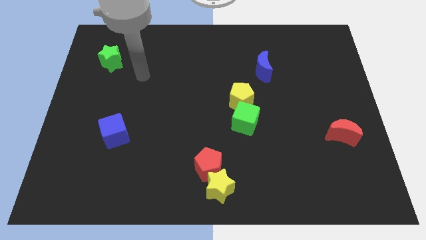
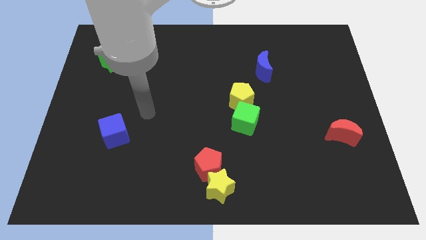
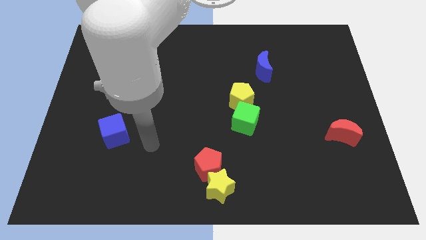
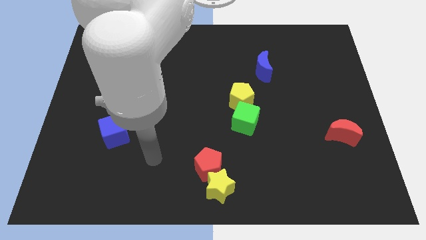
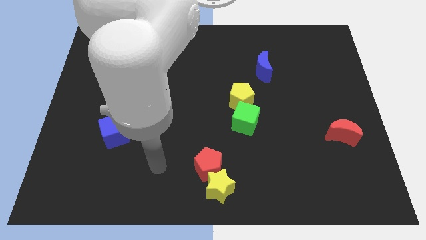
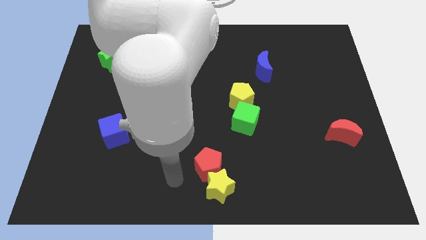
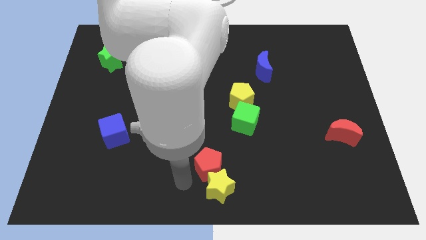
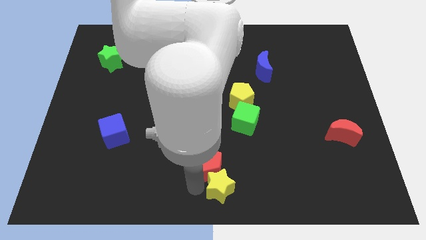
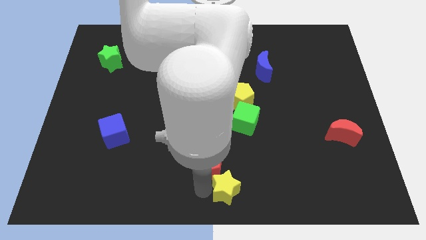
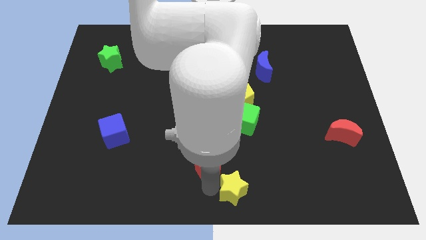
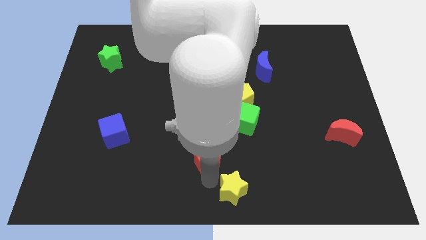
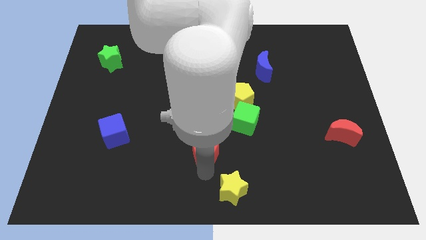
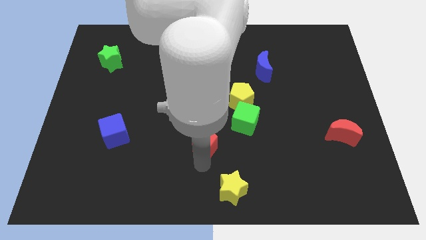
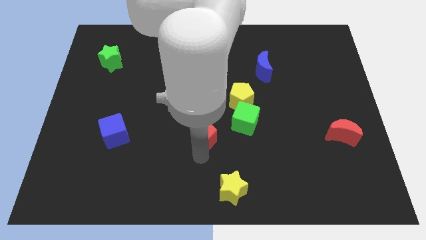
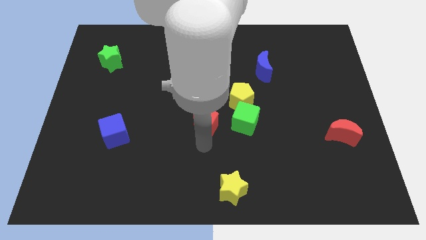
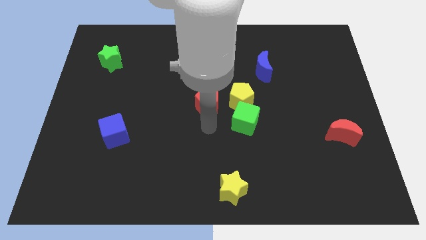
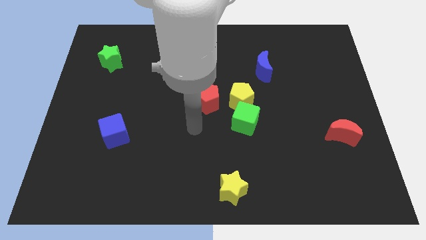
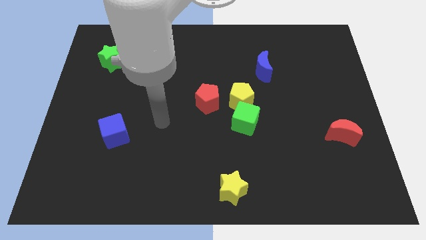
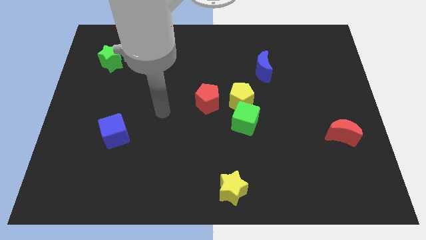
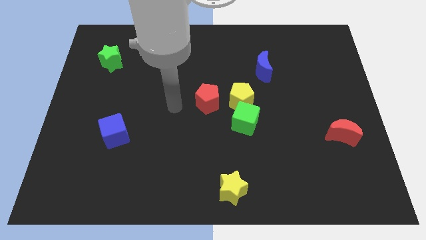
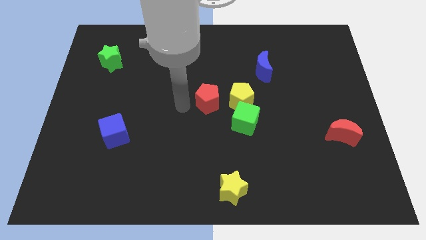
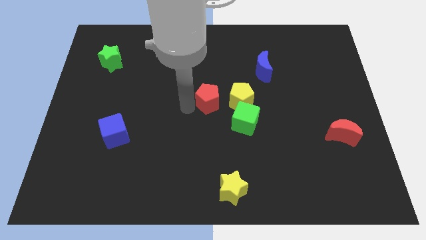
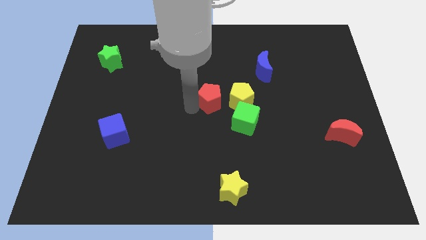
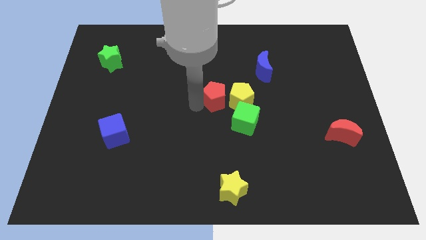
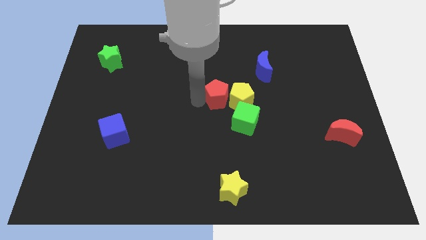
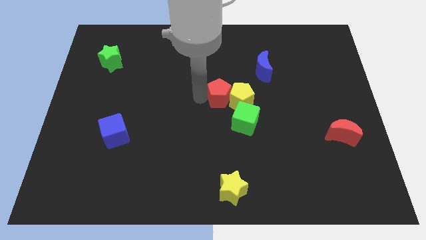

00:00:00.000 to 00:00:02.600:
move the red pentagon towards the yellow pentagon

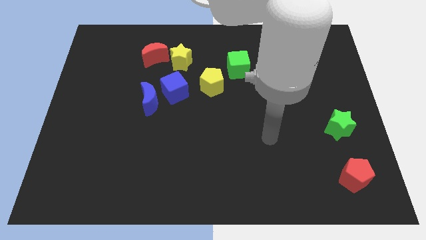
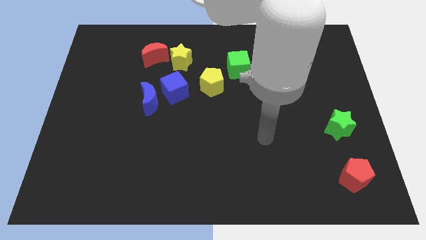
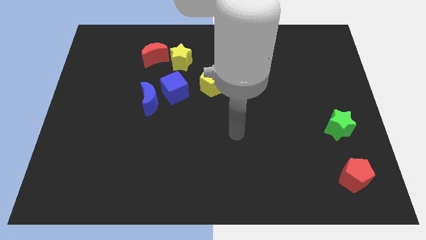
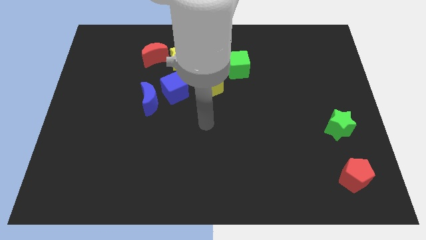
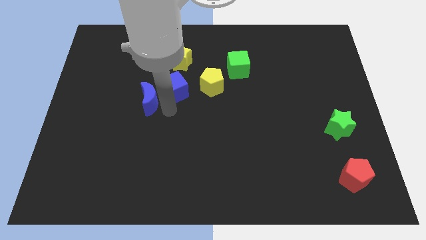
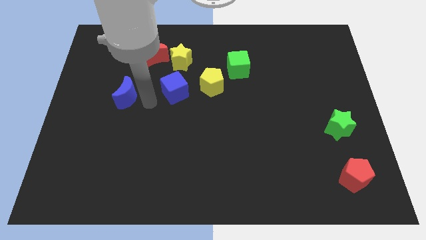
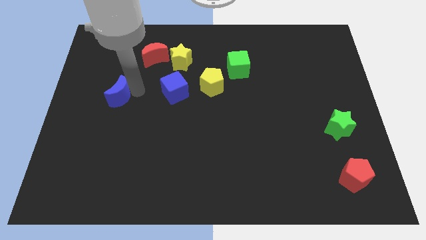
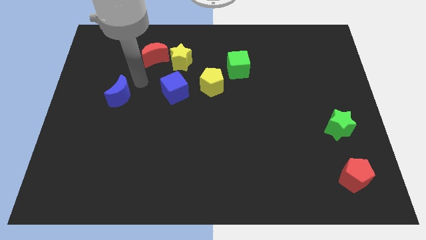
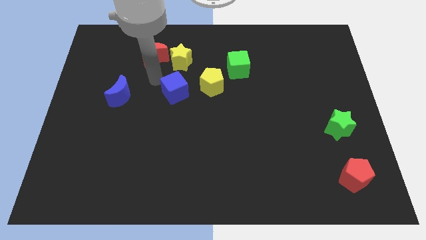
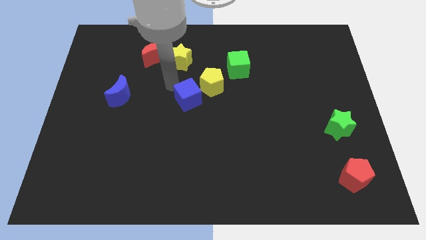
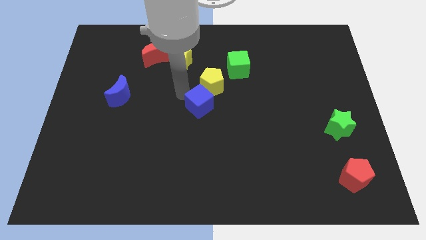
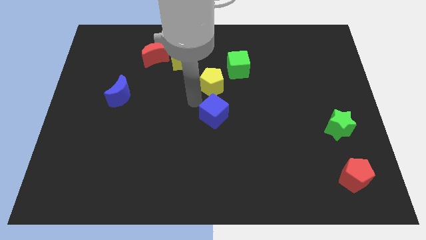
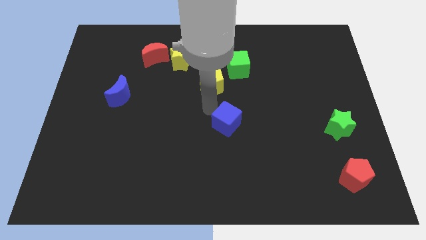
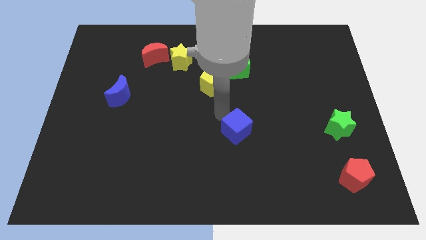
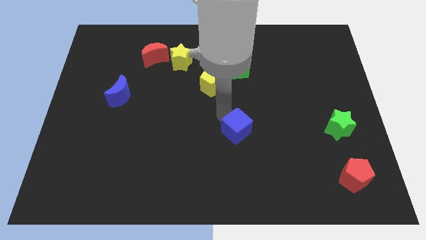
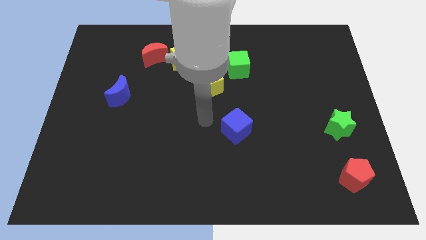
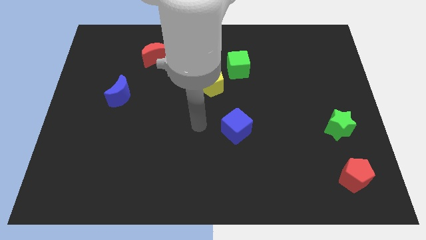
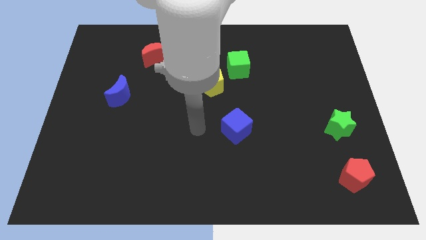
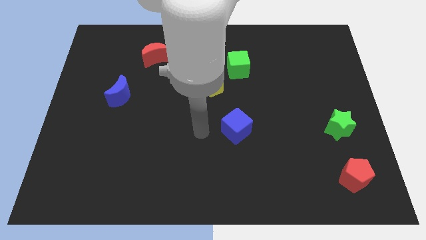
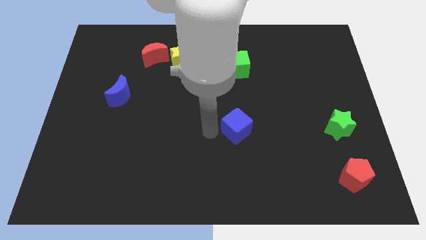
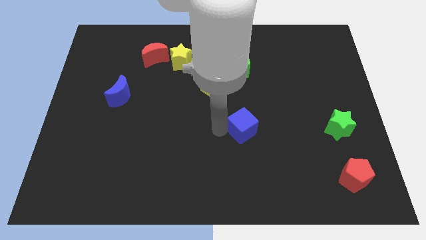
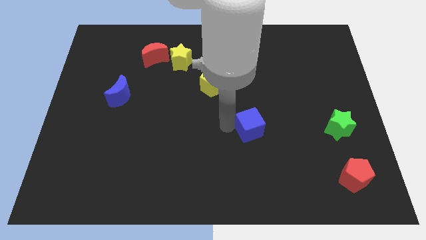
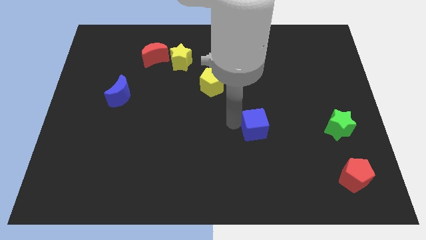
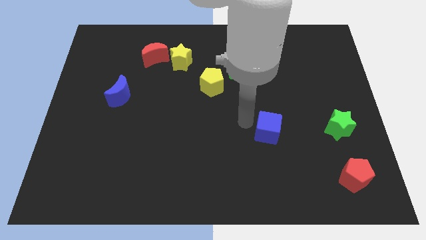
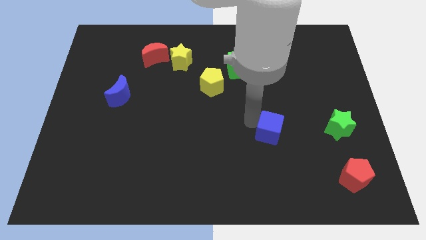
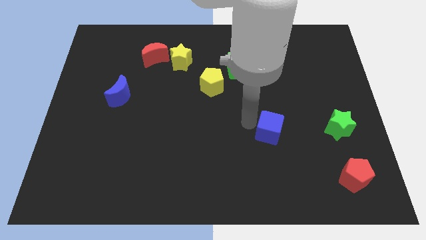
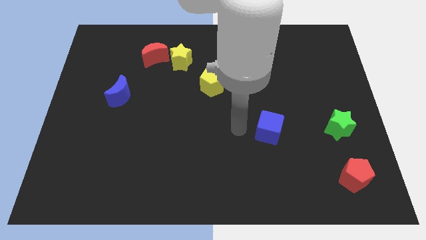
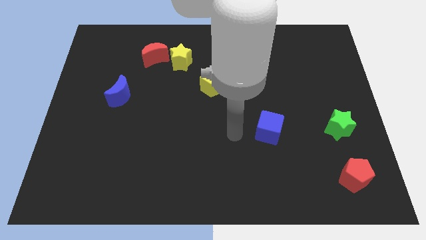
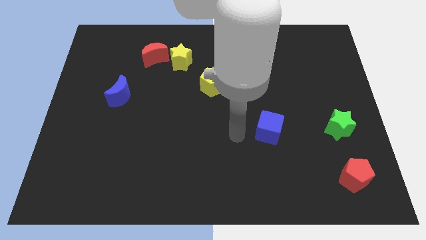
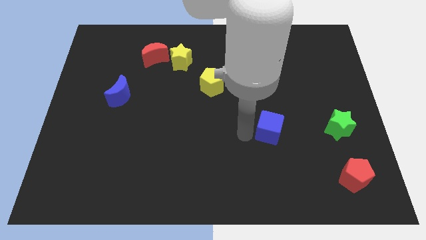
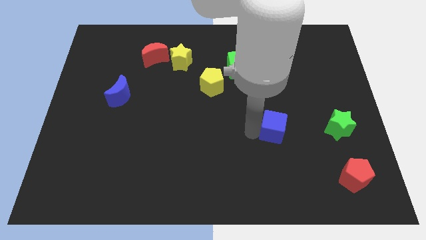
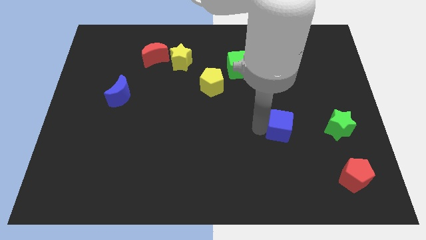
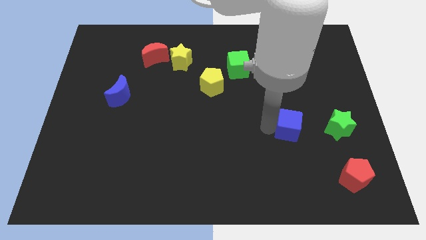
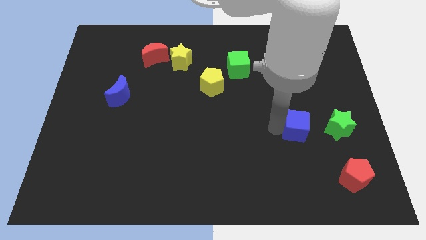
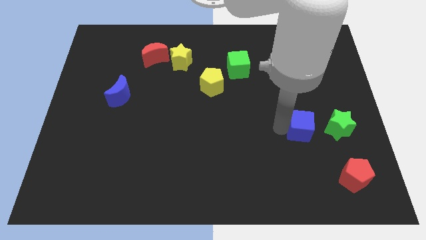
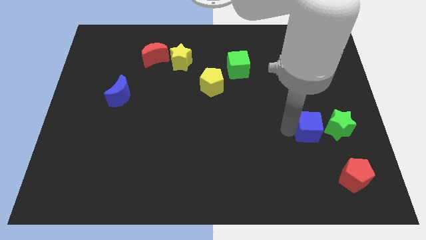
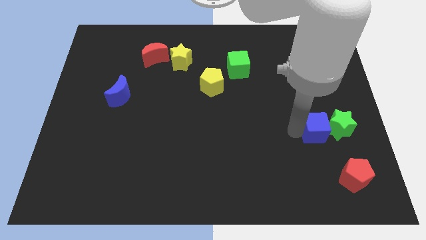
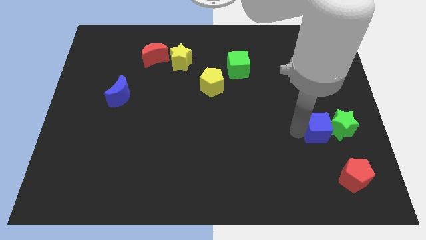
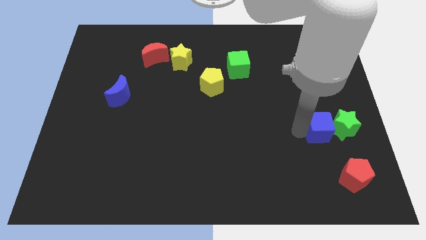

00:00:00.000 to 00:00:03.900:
move the blue cube next to the green star

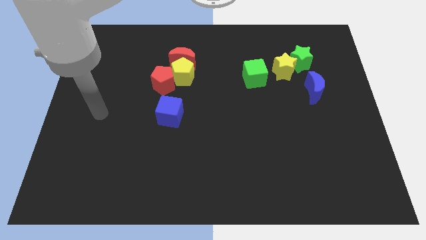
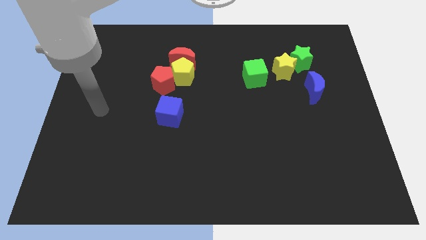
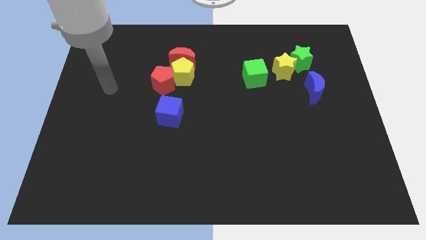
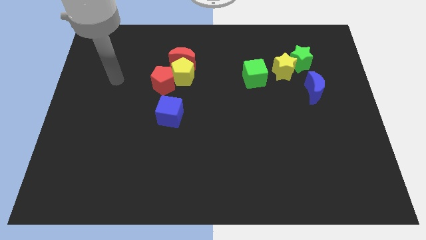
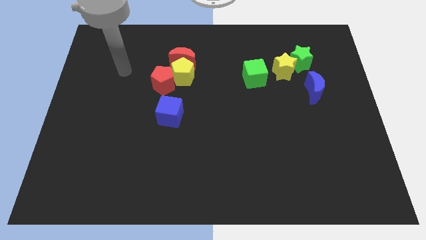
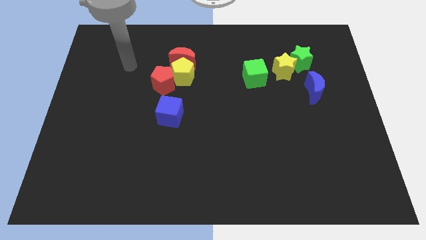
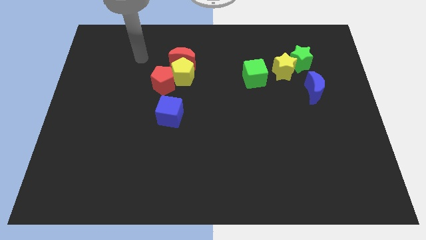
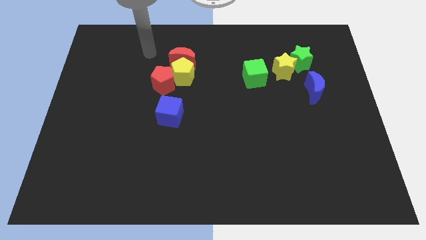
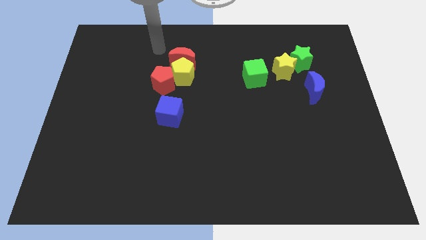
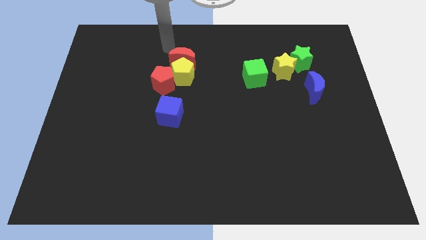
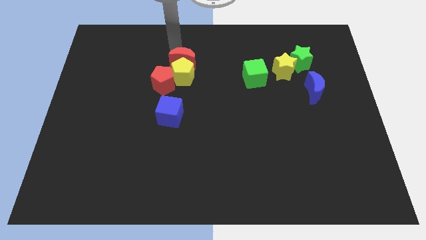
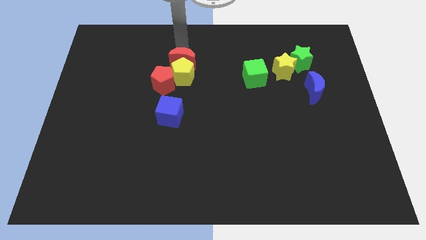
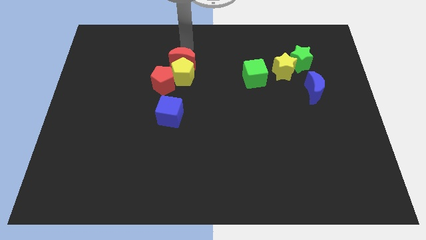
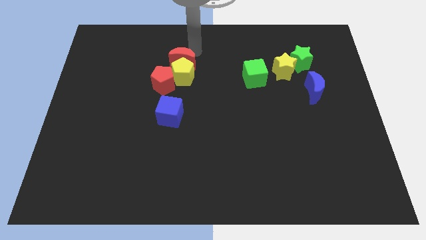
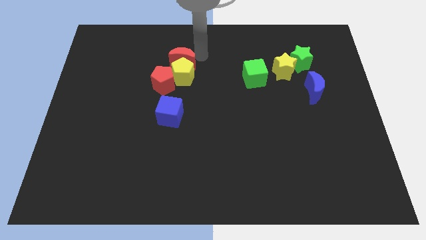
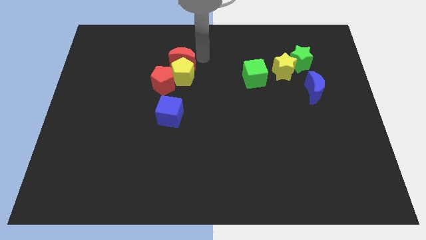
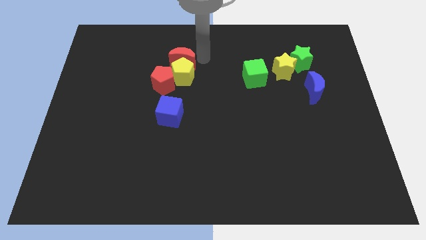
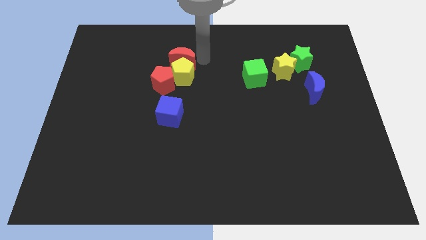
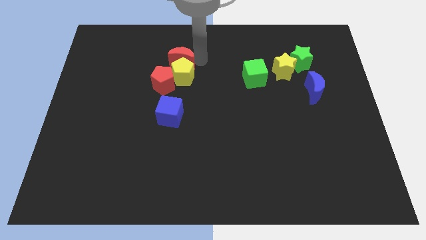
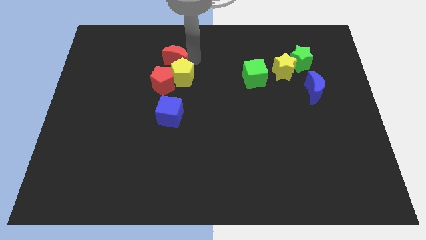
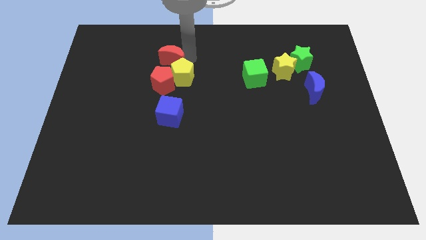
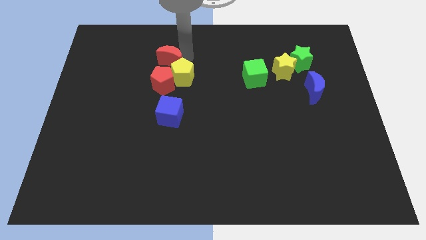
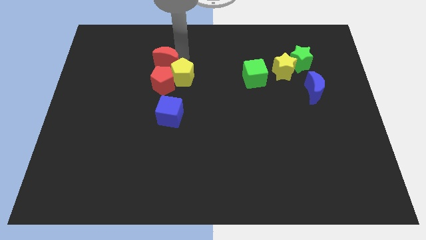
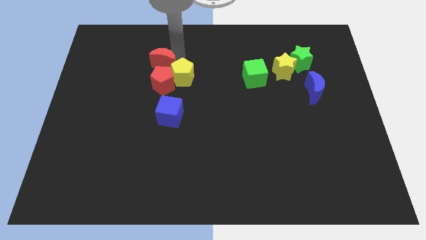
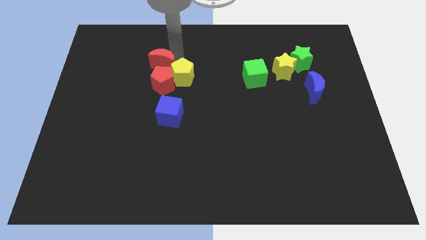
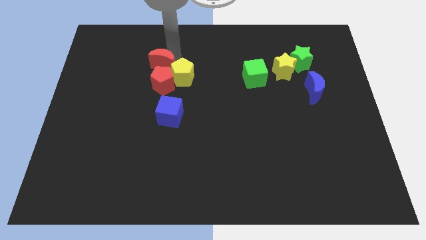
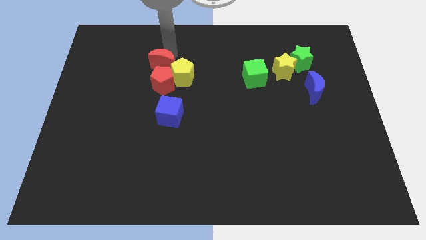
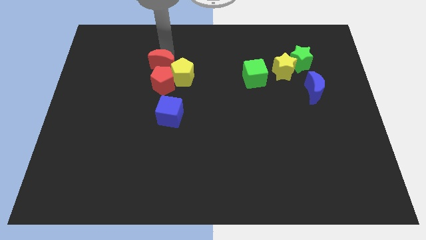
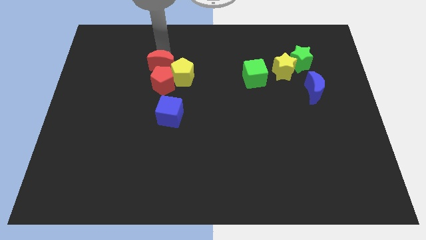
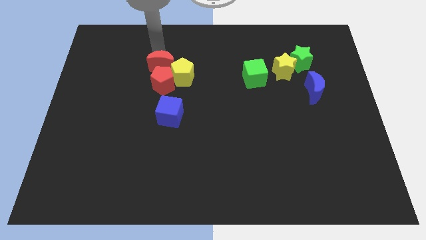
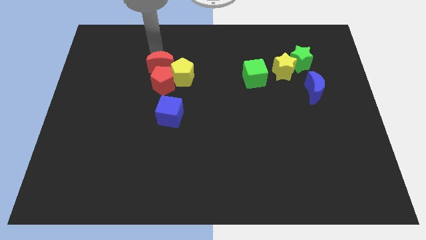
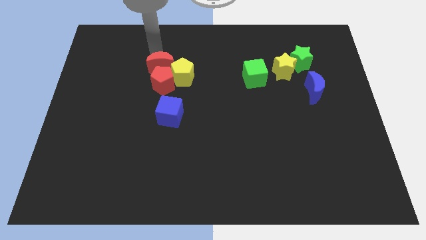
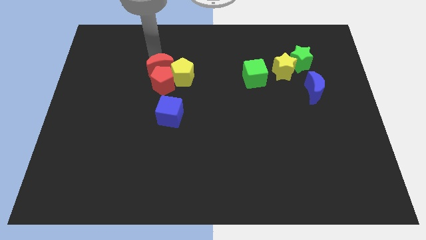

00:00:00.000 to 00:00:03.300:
move the red moon to the red pentagon
